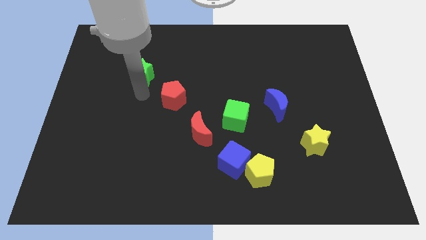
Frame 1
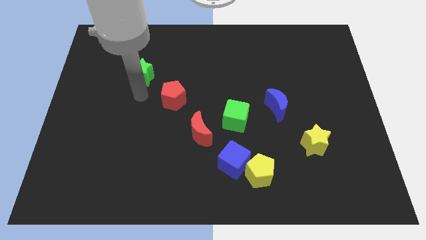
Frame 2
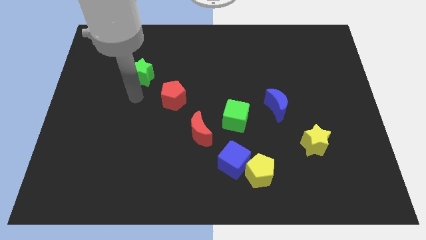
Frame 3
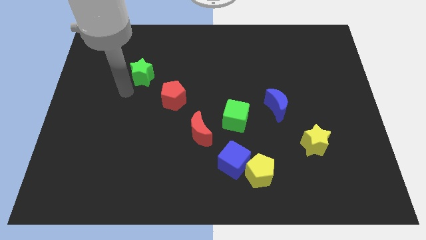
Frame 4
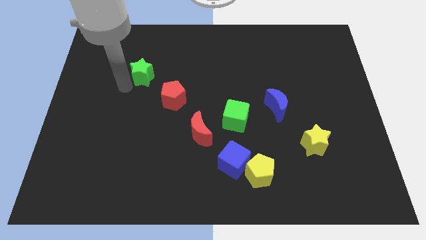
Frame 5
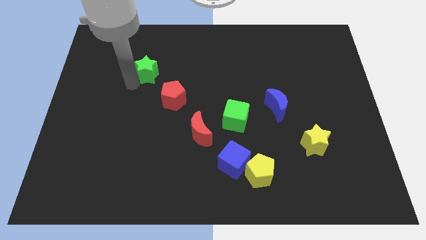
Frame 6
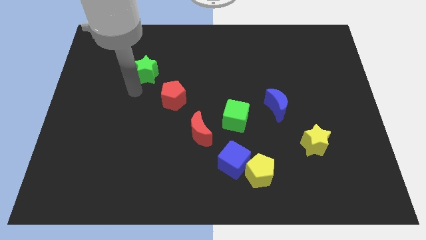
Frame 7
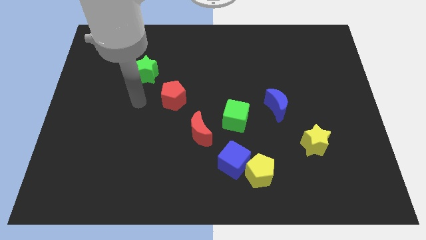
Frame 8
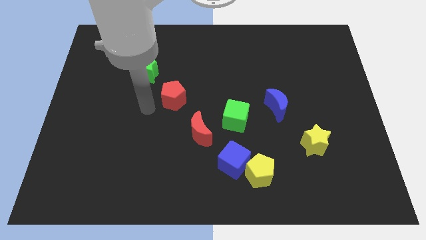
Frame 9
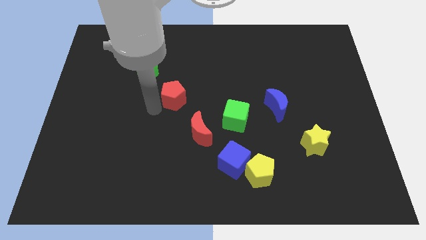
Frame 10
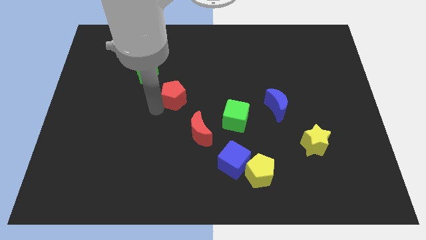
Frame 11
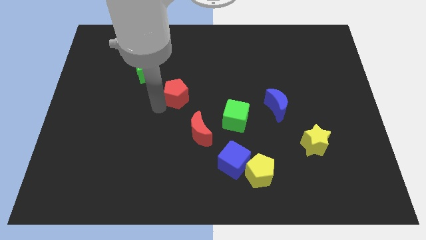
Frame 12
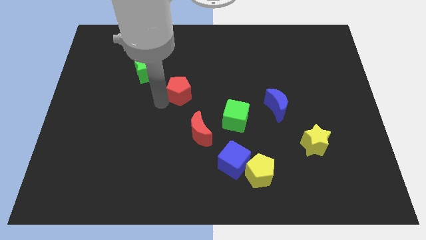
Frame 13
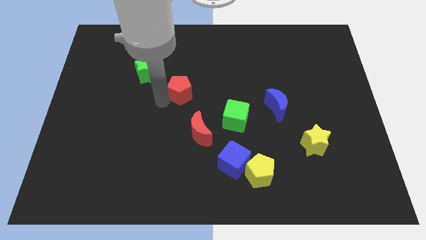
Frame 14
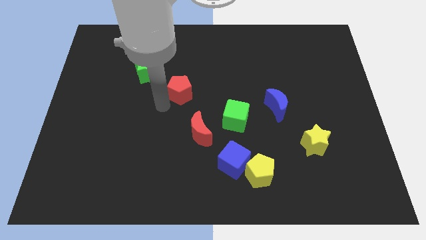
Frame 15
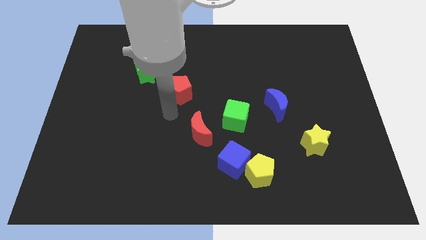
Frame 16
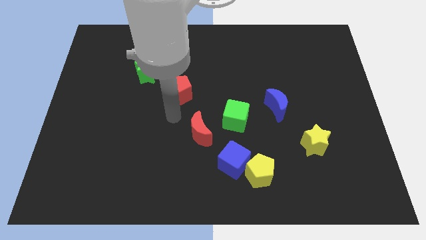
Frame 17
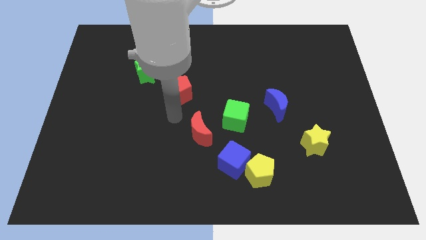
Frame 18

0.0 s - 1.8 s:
push the red pentagon slightly to the top

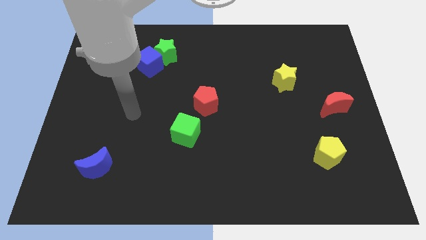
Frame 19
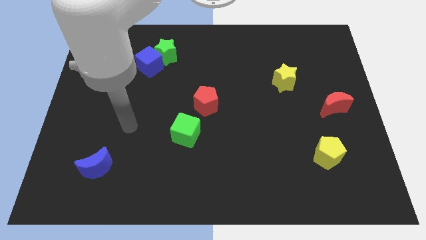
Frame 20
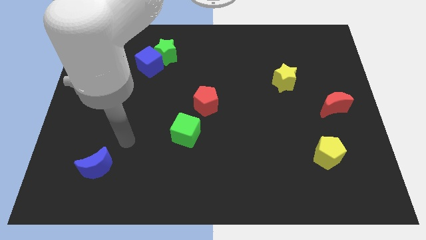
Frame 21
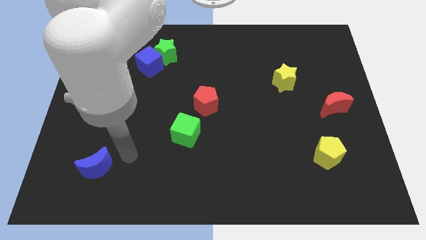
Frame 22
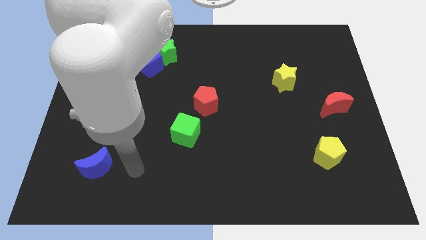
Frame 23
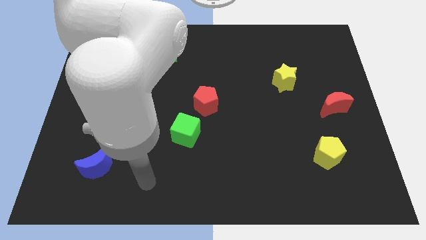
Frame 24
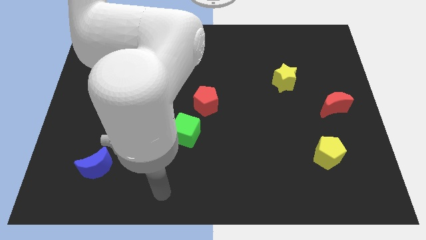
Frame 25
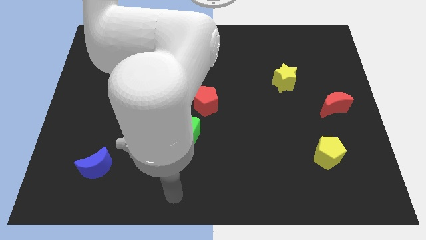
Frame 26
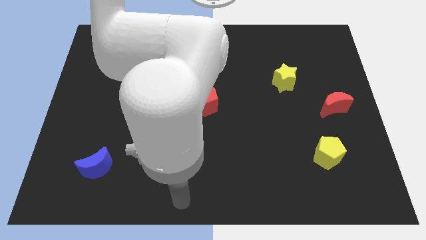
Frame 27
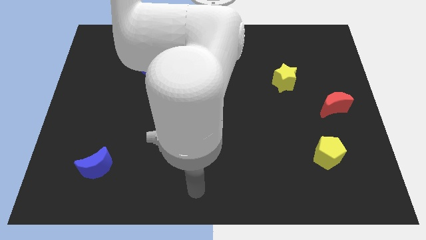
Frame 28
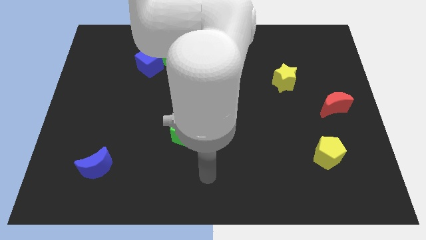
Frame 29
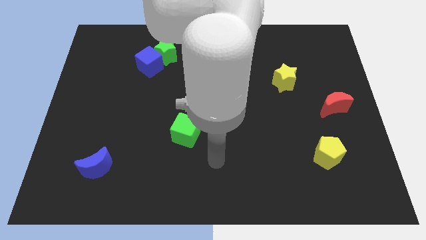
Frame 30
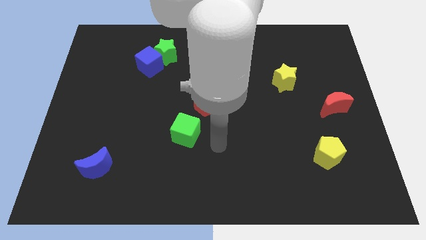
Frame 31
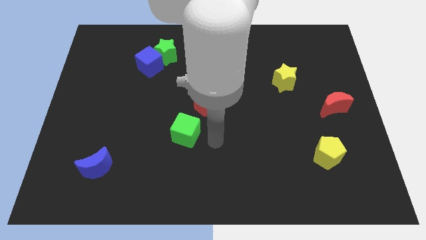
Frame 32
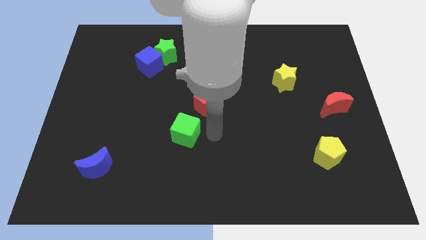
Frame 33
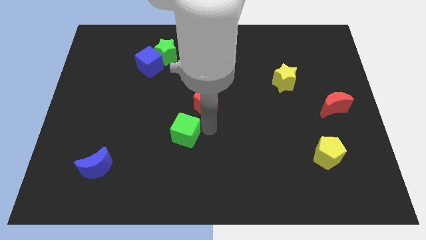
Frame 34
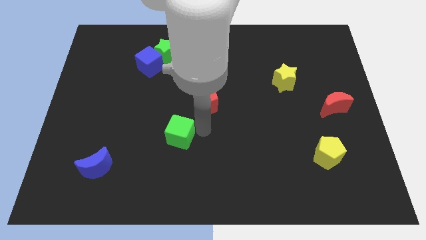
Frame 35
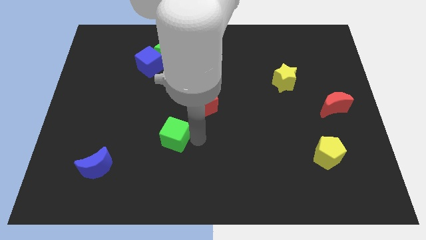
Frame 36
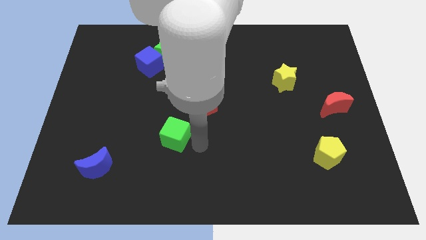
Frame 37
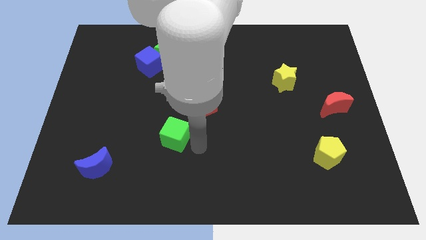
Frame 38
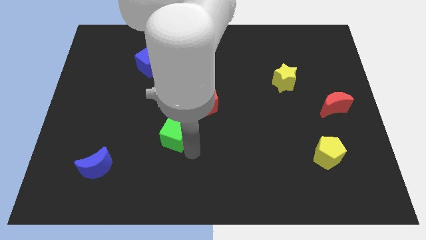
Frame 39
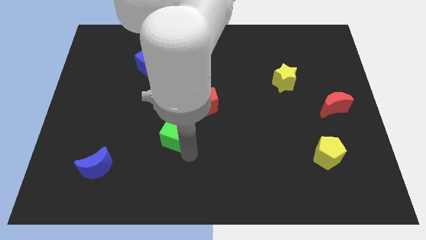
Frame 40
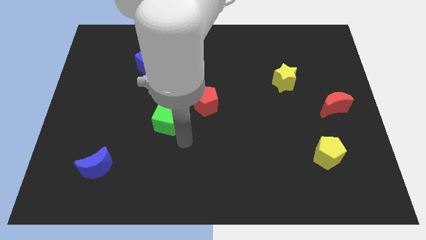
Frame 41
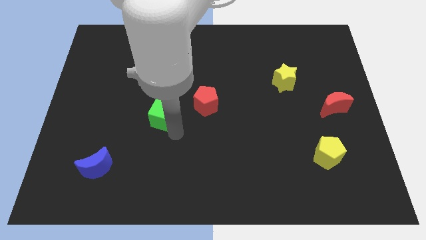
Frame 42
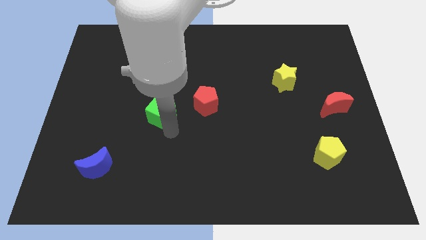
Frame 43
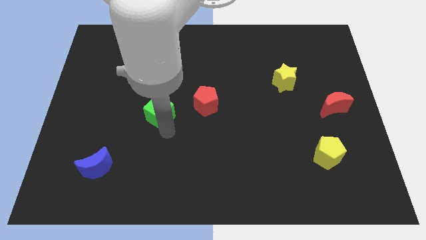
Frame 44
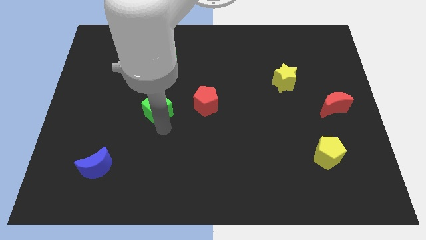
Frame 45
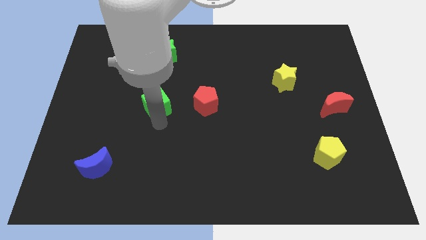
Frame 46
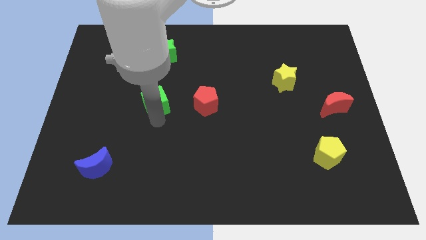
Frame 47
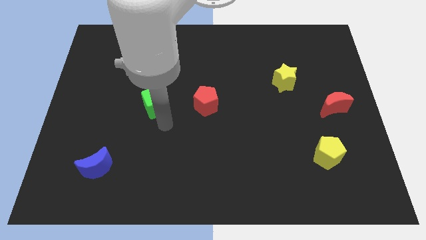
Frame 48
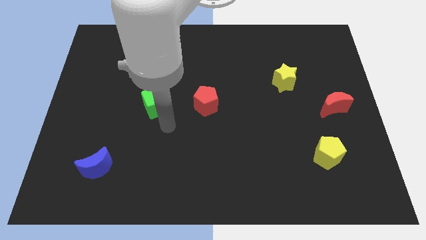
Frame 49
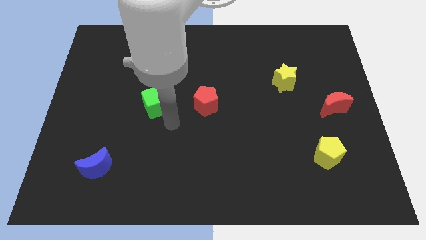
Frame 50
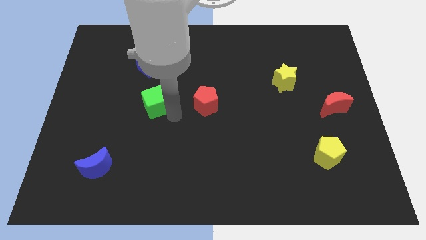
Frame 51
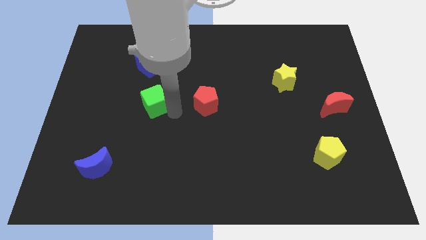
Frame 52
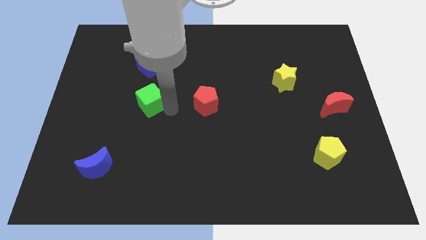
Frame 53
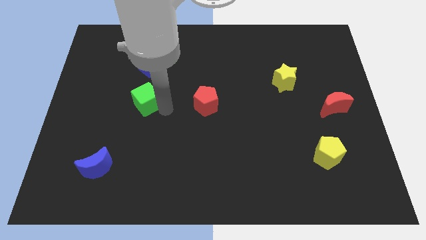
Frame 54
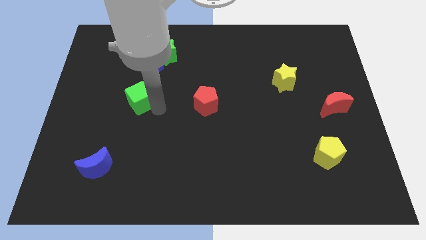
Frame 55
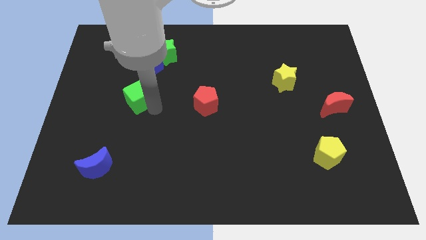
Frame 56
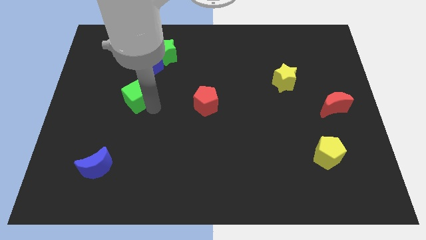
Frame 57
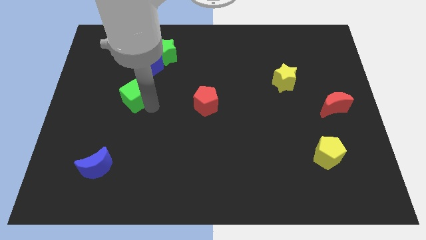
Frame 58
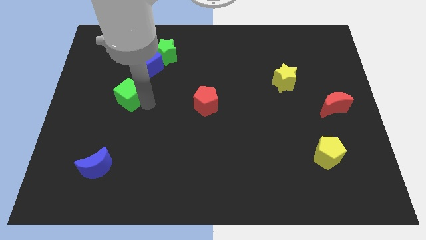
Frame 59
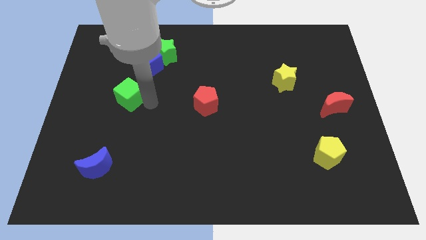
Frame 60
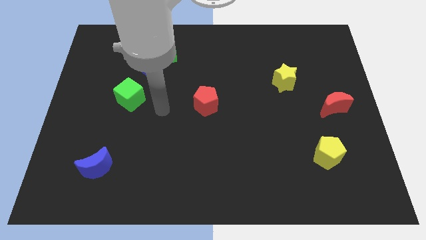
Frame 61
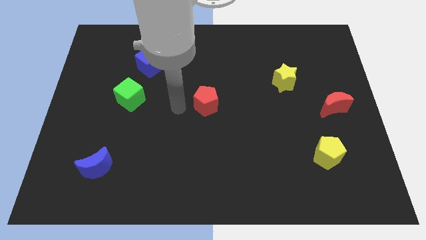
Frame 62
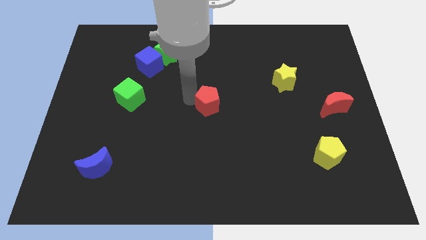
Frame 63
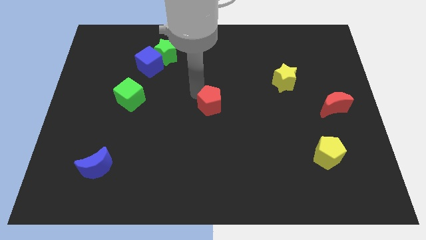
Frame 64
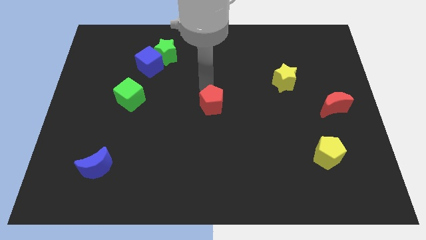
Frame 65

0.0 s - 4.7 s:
place the green cube to the left of the red pentagon

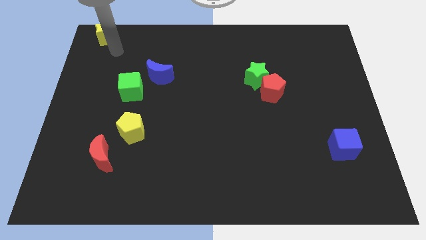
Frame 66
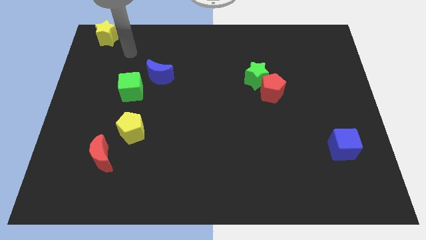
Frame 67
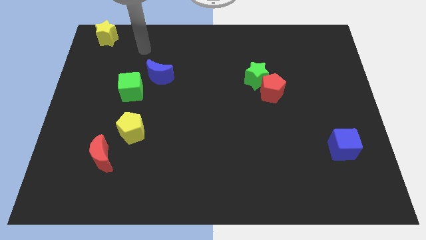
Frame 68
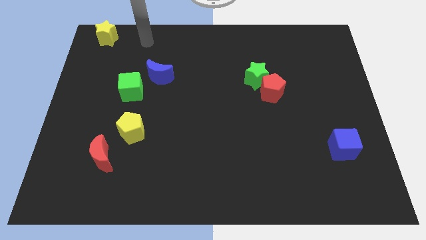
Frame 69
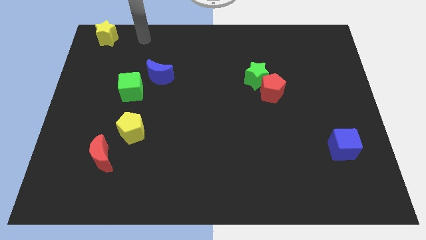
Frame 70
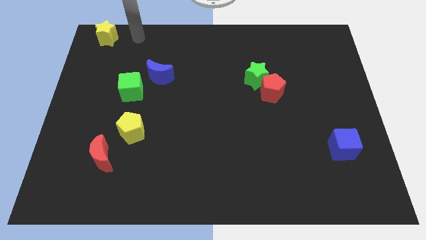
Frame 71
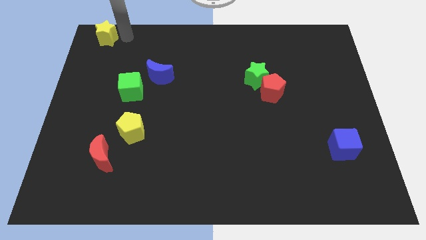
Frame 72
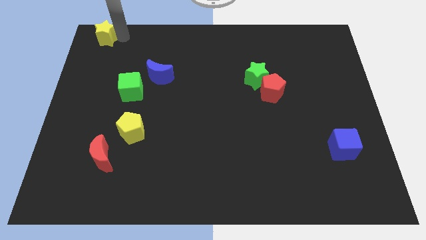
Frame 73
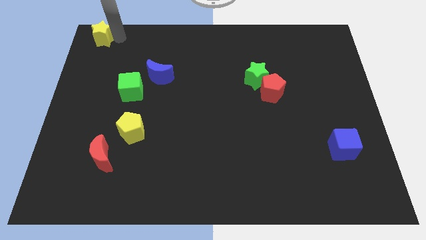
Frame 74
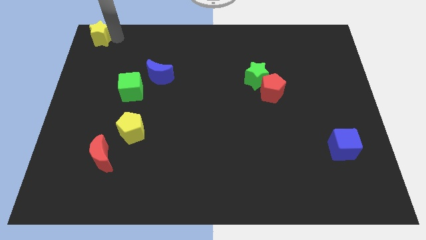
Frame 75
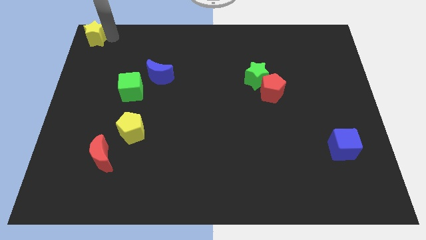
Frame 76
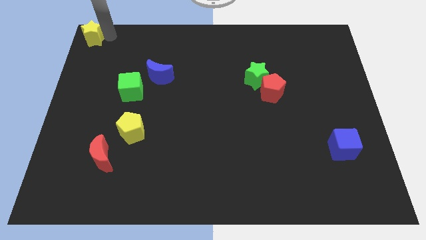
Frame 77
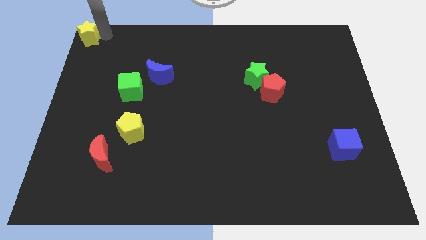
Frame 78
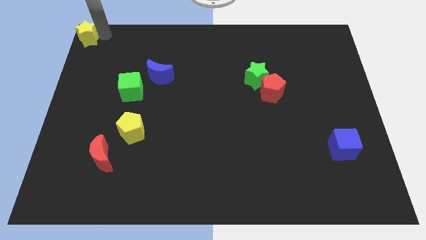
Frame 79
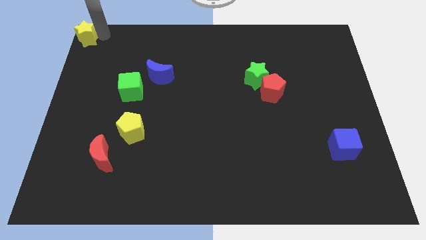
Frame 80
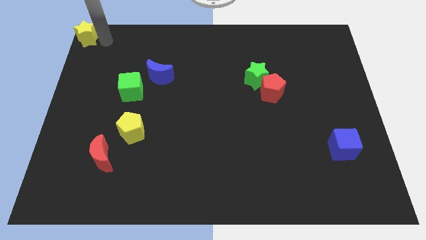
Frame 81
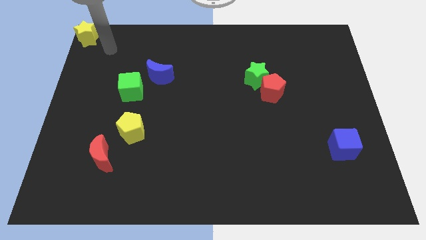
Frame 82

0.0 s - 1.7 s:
put the yellow star at the top left corner of the board

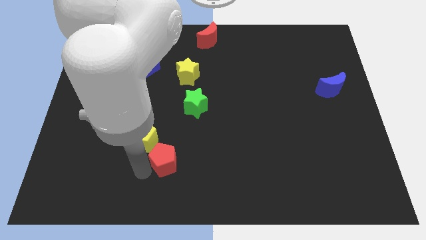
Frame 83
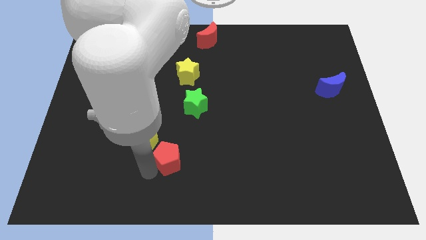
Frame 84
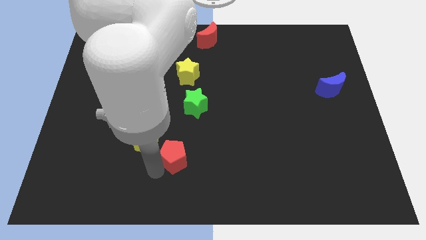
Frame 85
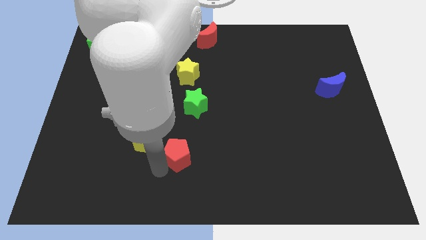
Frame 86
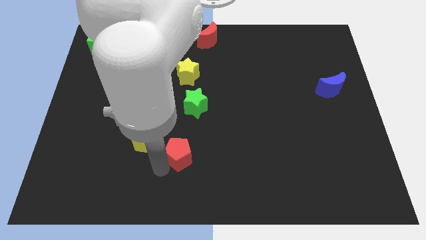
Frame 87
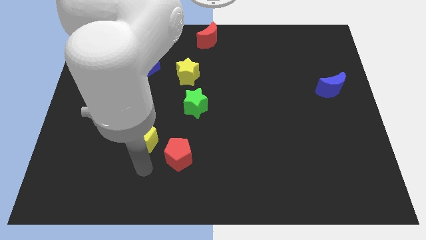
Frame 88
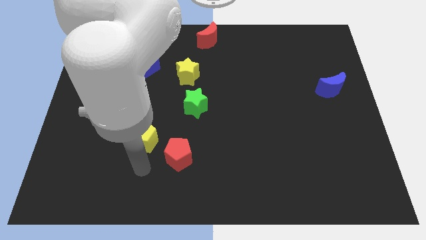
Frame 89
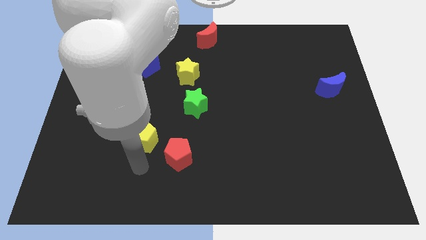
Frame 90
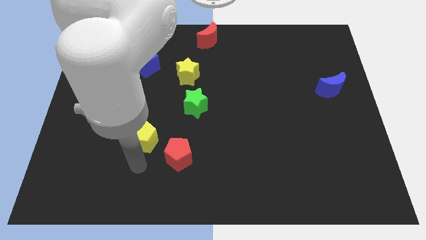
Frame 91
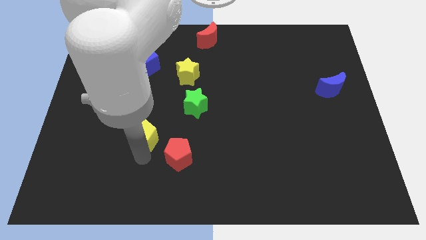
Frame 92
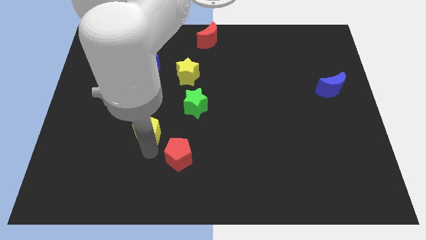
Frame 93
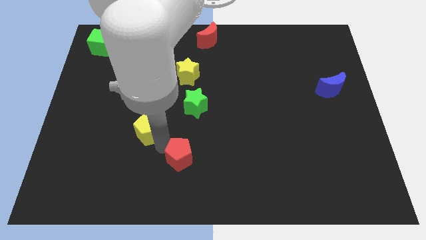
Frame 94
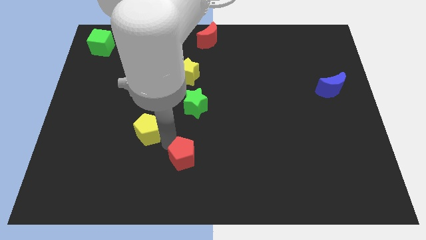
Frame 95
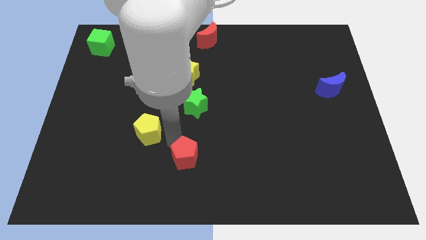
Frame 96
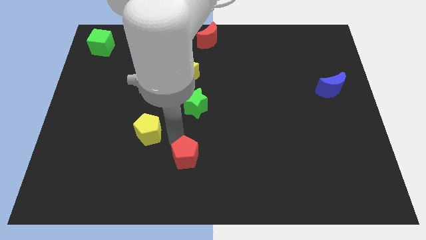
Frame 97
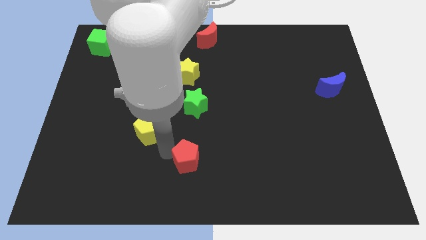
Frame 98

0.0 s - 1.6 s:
push the red pentagon to the bottom of the green star
